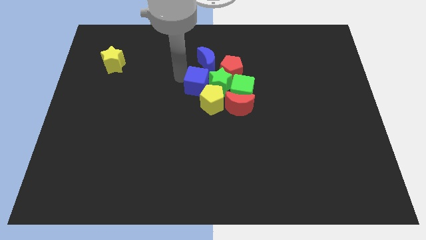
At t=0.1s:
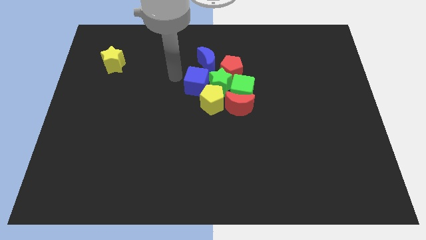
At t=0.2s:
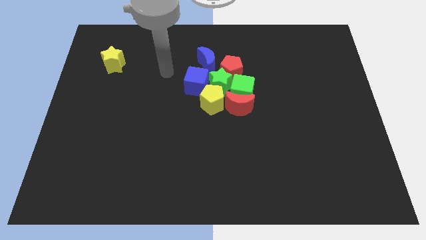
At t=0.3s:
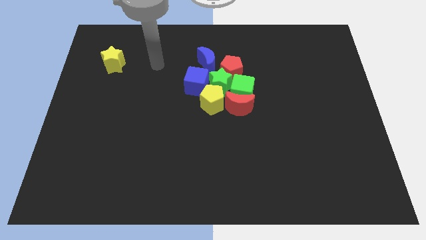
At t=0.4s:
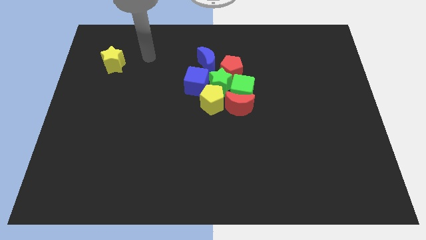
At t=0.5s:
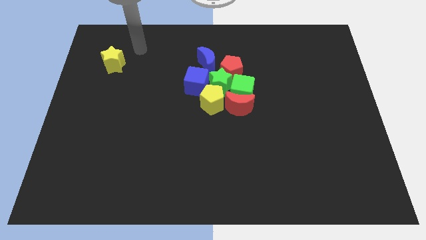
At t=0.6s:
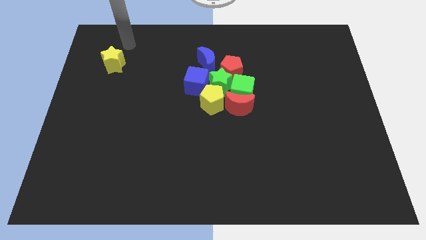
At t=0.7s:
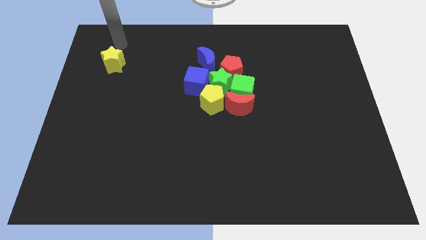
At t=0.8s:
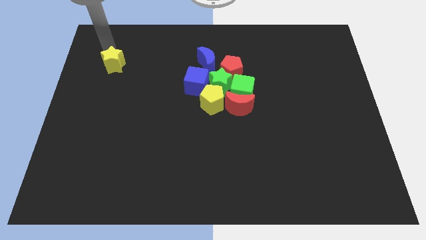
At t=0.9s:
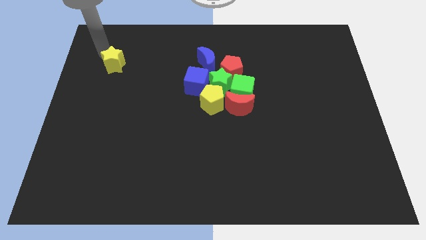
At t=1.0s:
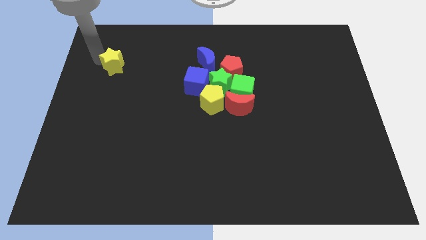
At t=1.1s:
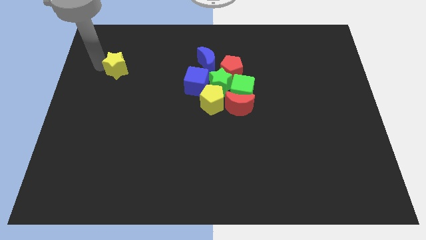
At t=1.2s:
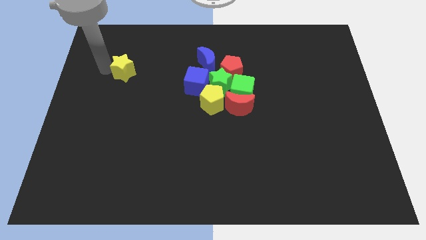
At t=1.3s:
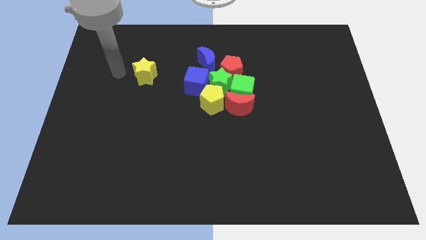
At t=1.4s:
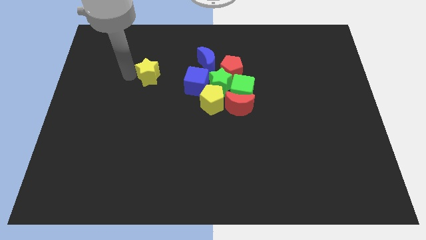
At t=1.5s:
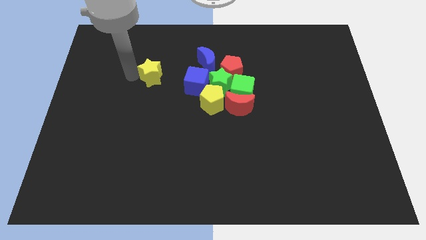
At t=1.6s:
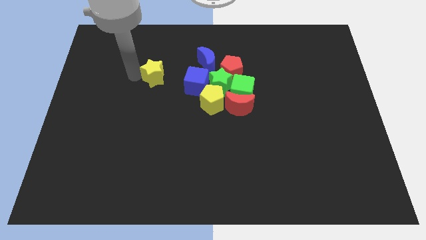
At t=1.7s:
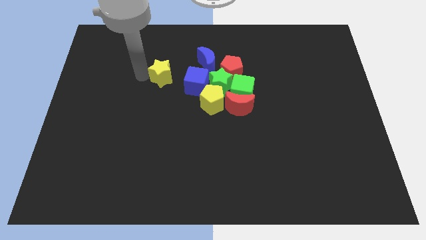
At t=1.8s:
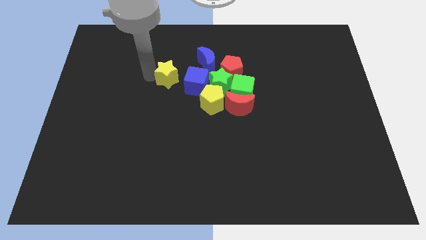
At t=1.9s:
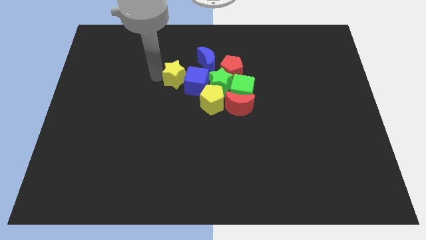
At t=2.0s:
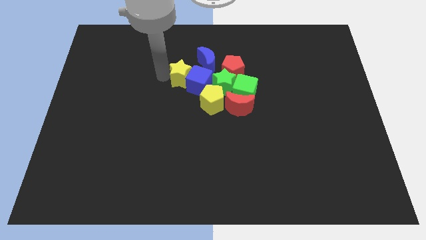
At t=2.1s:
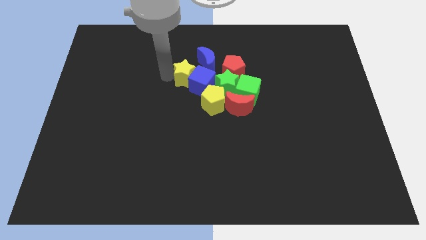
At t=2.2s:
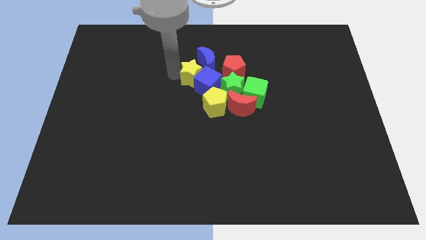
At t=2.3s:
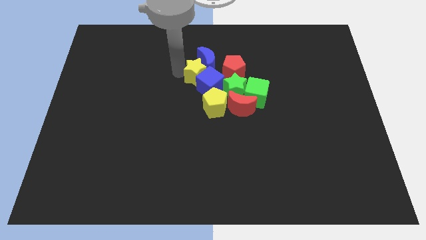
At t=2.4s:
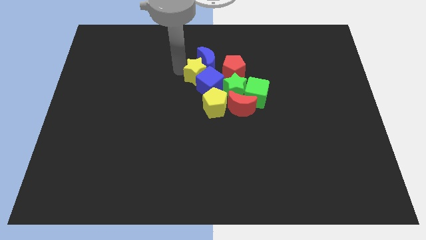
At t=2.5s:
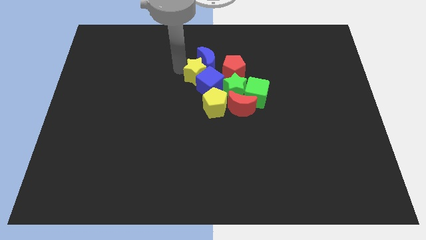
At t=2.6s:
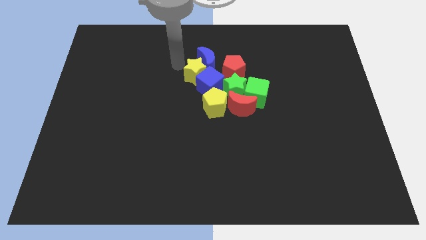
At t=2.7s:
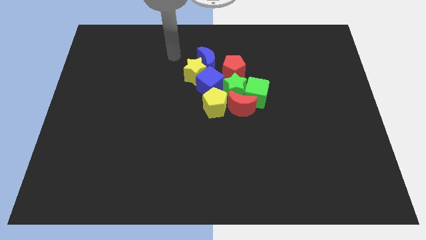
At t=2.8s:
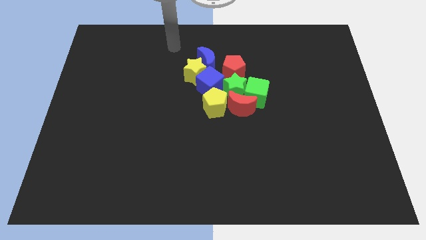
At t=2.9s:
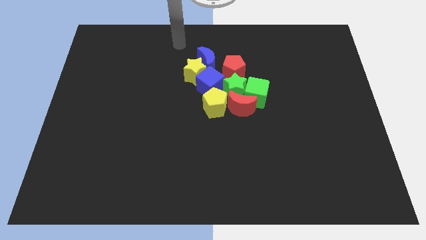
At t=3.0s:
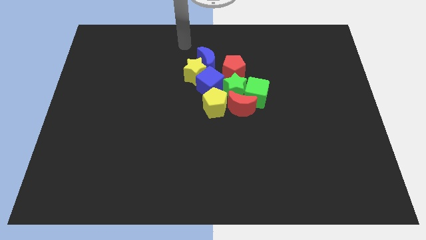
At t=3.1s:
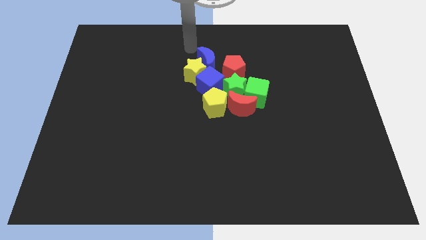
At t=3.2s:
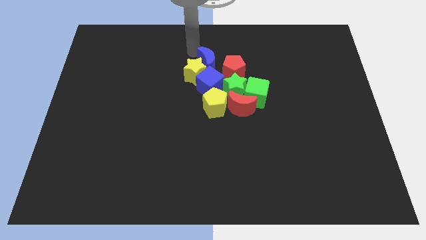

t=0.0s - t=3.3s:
push the yellow star into the group of blocks

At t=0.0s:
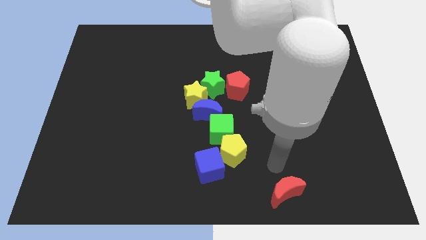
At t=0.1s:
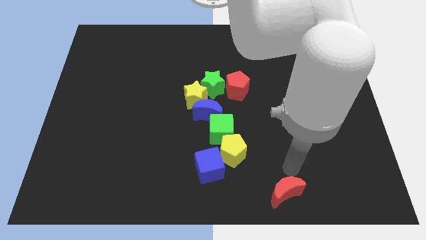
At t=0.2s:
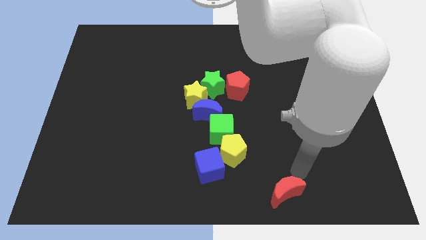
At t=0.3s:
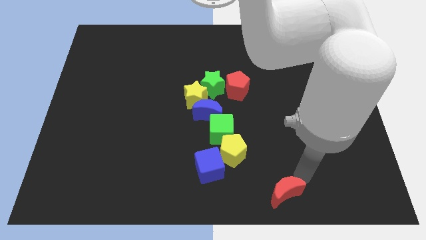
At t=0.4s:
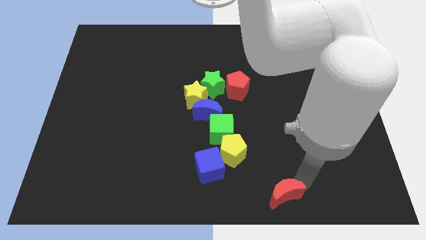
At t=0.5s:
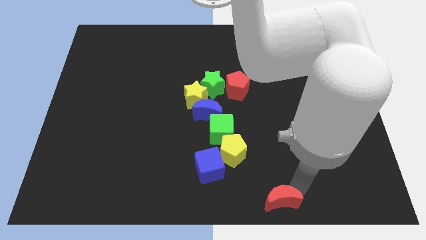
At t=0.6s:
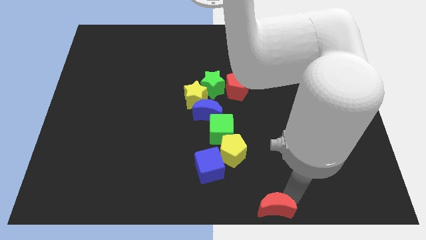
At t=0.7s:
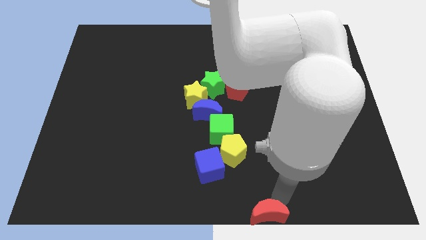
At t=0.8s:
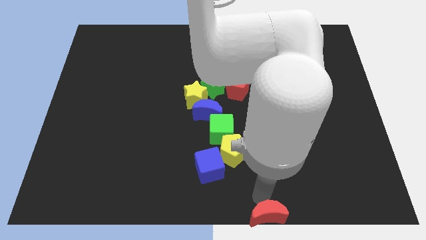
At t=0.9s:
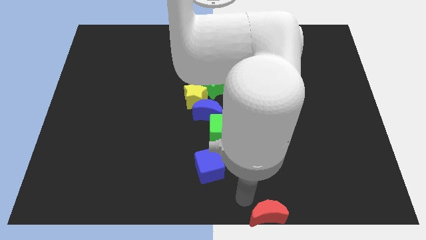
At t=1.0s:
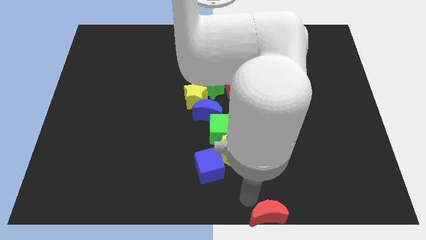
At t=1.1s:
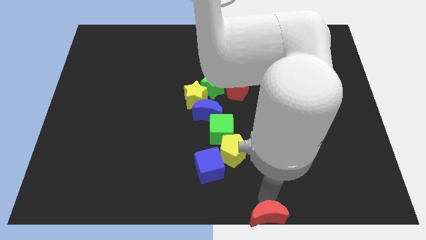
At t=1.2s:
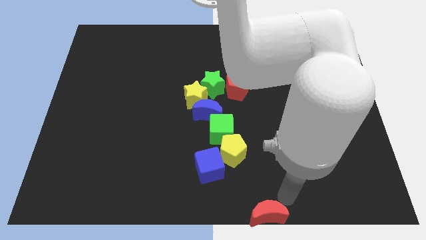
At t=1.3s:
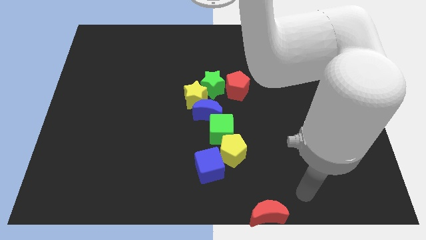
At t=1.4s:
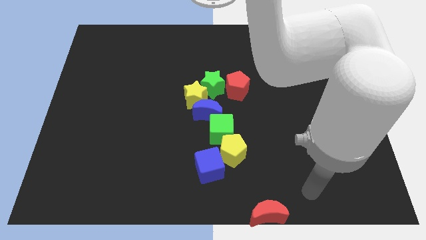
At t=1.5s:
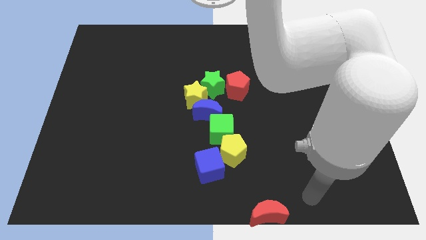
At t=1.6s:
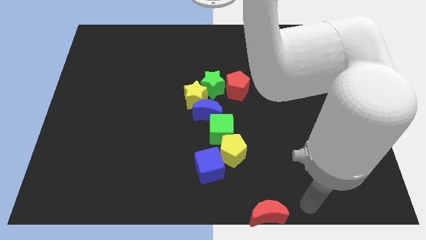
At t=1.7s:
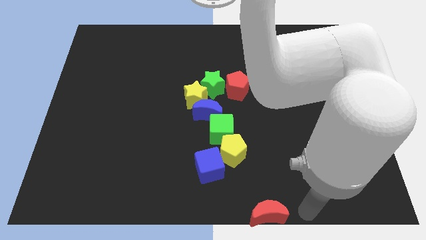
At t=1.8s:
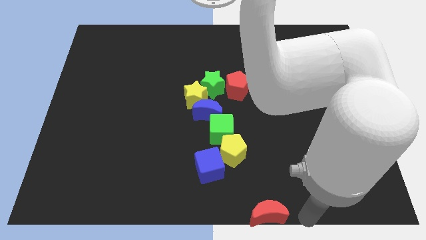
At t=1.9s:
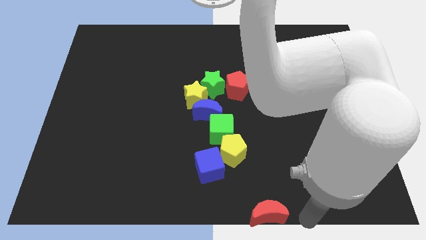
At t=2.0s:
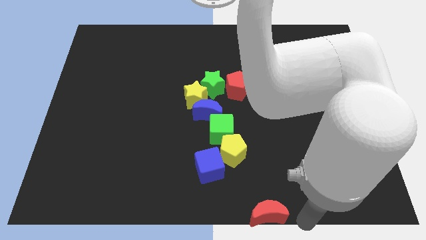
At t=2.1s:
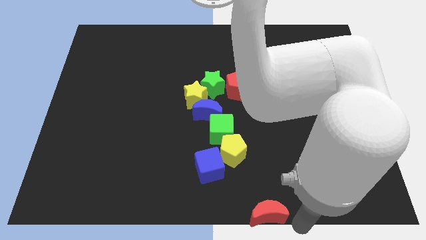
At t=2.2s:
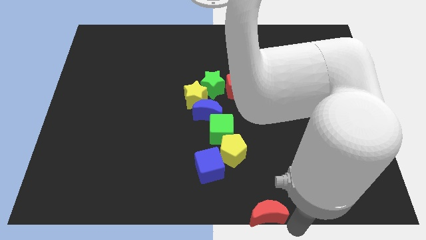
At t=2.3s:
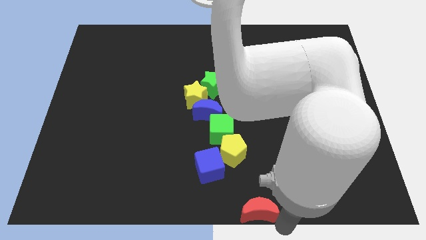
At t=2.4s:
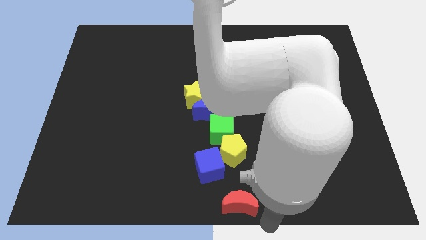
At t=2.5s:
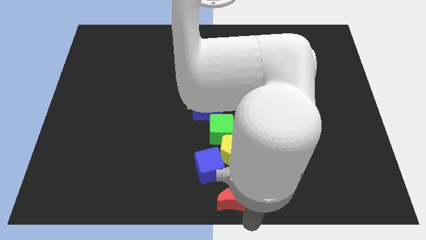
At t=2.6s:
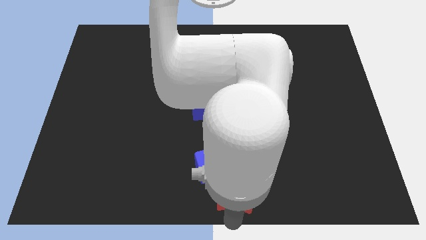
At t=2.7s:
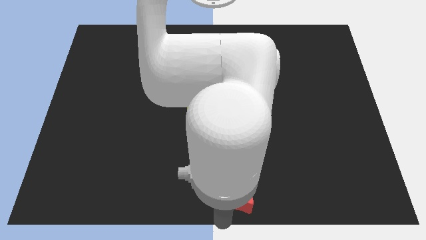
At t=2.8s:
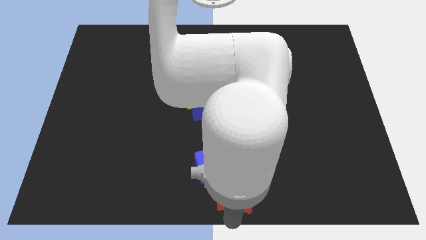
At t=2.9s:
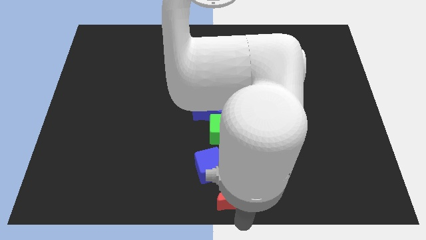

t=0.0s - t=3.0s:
place the red crescent at the bottom center of the board

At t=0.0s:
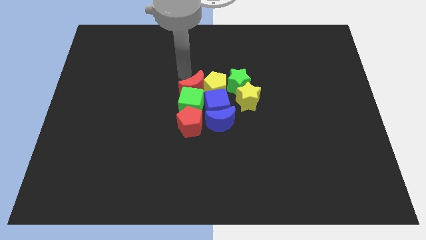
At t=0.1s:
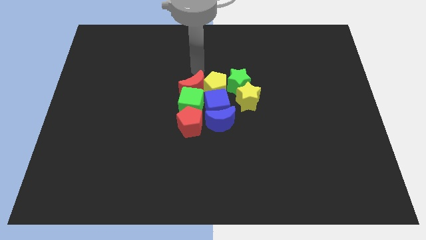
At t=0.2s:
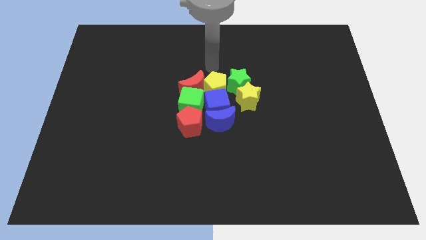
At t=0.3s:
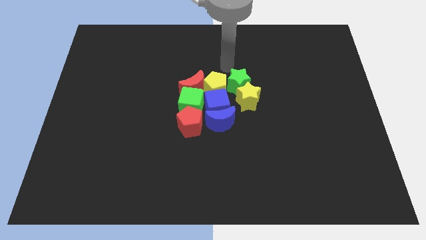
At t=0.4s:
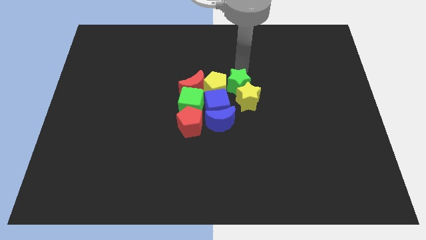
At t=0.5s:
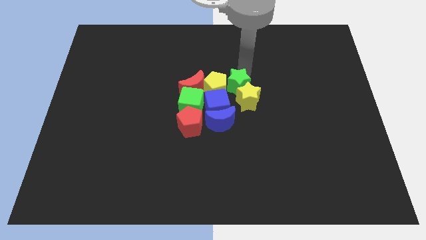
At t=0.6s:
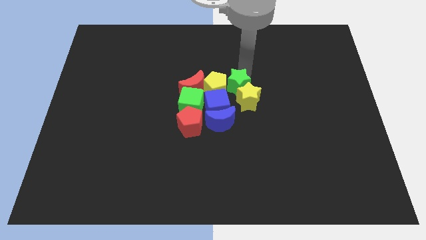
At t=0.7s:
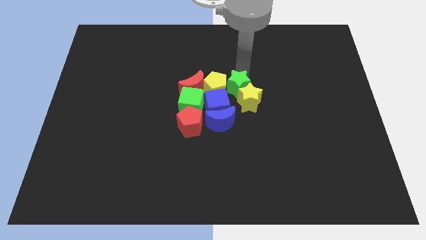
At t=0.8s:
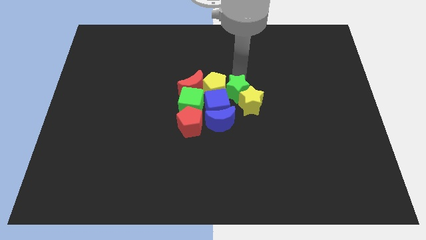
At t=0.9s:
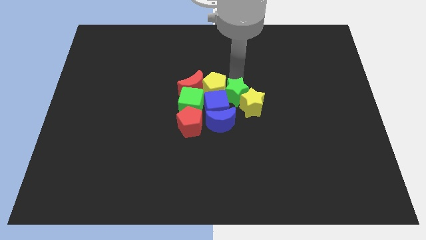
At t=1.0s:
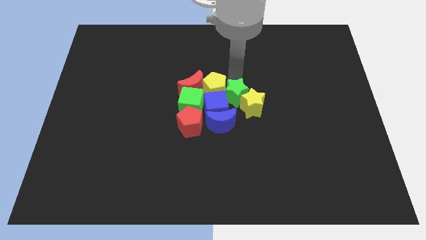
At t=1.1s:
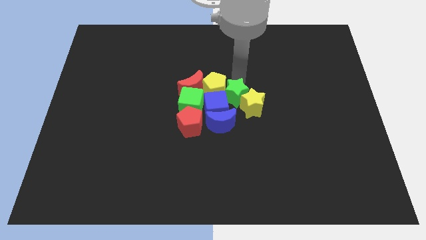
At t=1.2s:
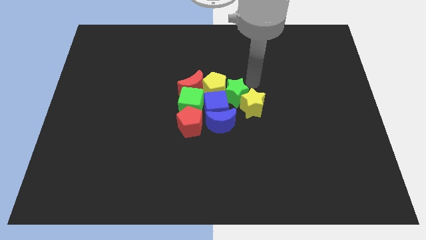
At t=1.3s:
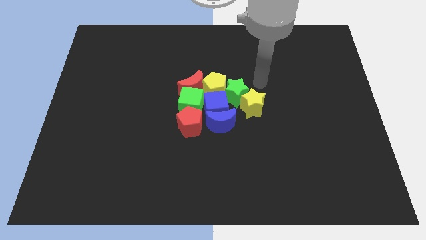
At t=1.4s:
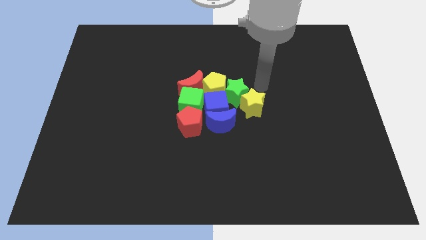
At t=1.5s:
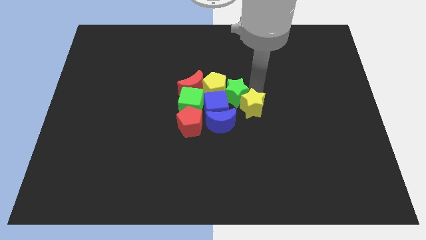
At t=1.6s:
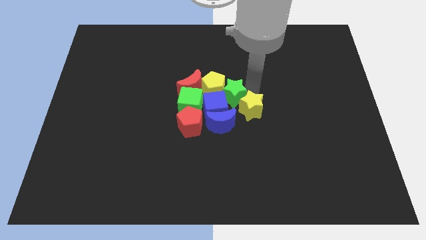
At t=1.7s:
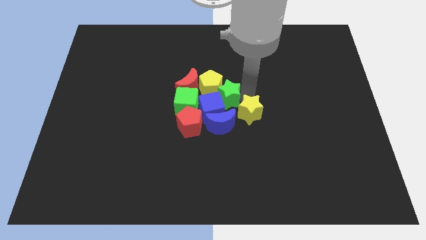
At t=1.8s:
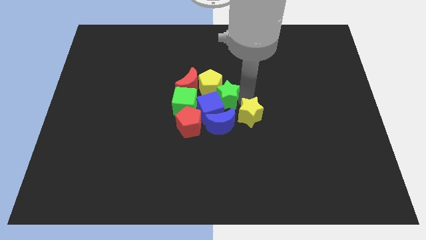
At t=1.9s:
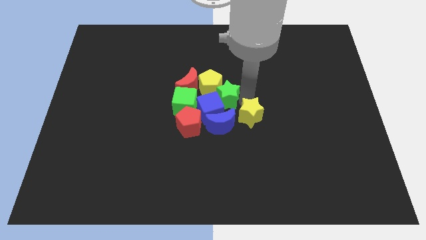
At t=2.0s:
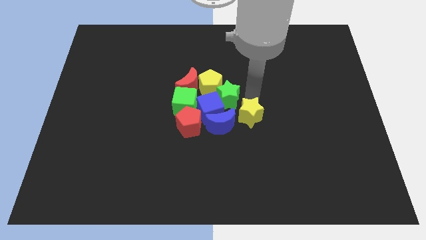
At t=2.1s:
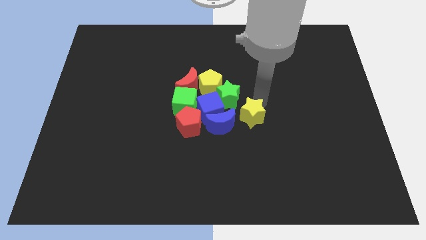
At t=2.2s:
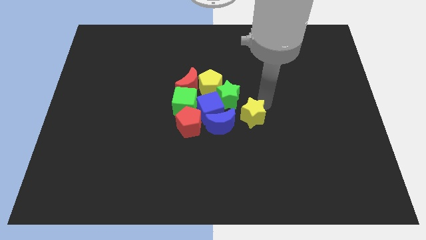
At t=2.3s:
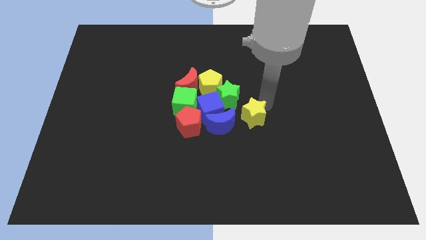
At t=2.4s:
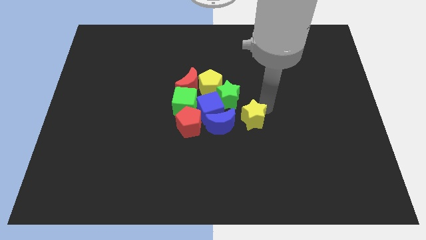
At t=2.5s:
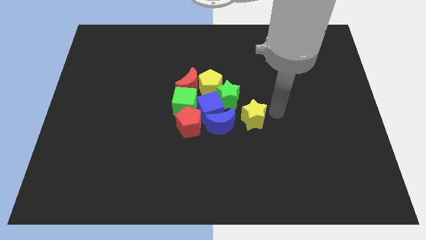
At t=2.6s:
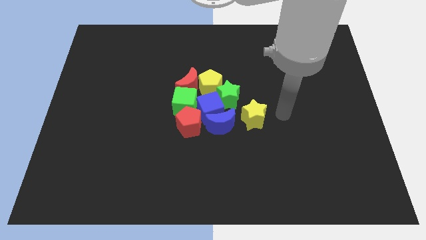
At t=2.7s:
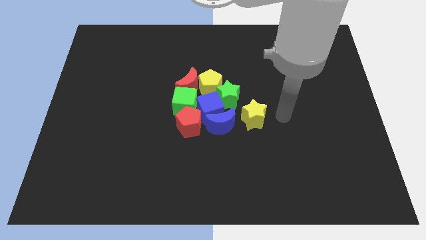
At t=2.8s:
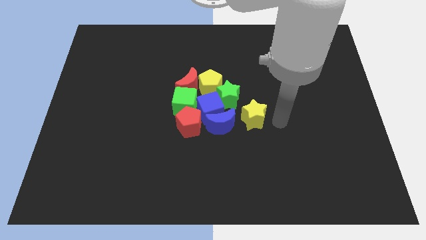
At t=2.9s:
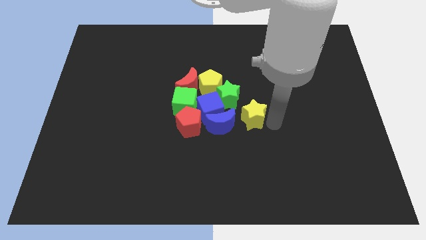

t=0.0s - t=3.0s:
adjust the green and yellow stars by touching the right sides of these
